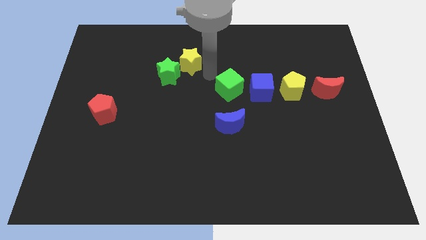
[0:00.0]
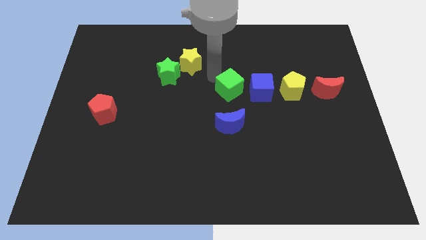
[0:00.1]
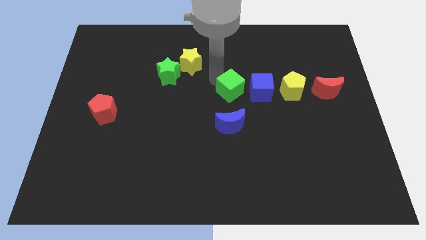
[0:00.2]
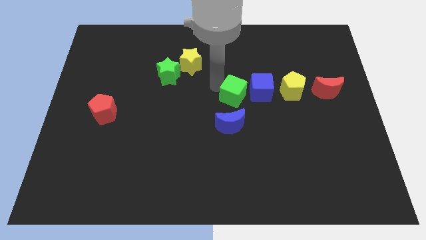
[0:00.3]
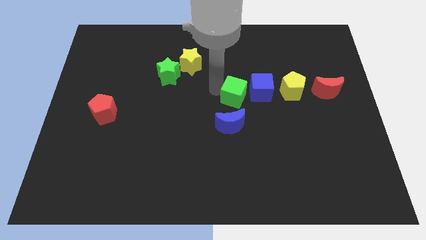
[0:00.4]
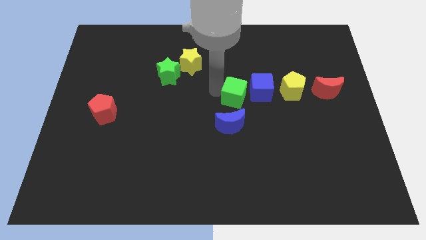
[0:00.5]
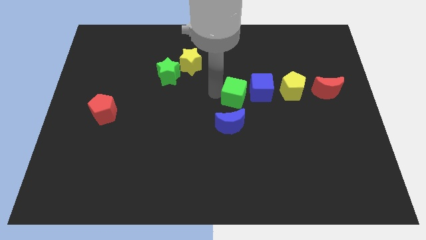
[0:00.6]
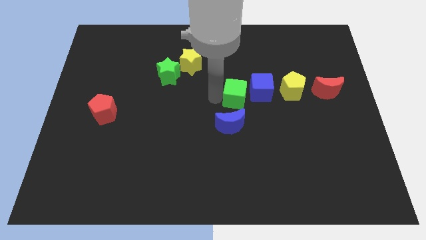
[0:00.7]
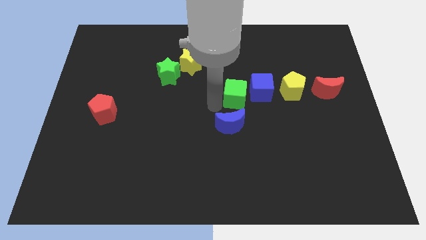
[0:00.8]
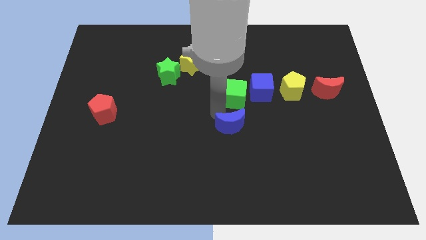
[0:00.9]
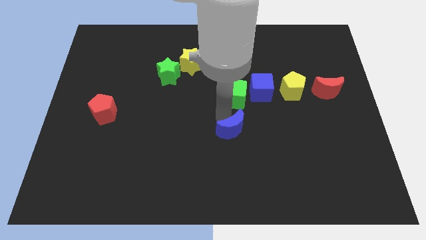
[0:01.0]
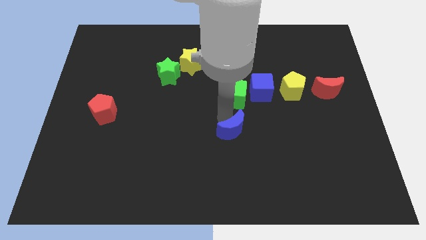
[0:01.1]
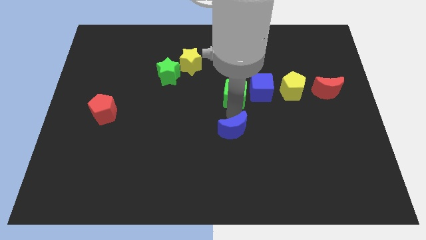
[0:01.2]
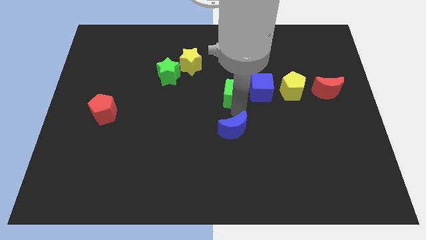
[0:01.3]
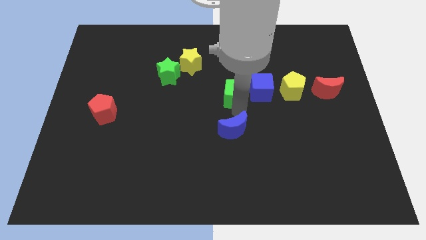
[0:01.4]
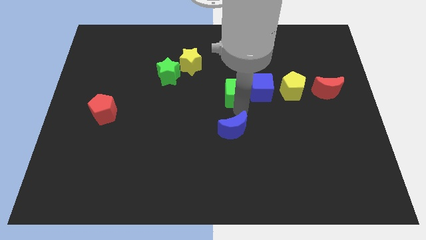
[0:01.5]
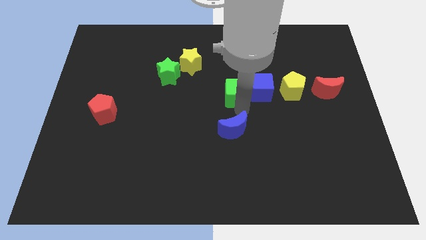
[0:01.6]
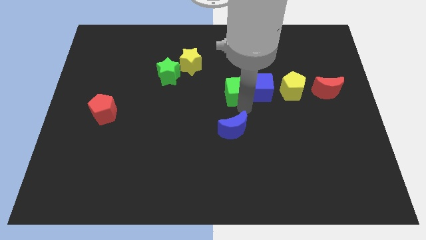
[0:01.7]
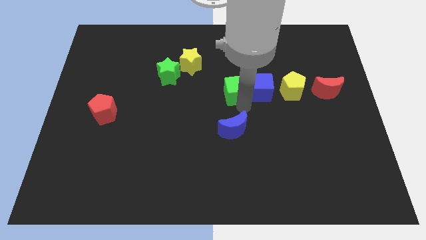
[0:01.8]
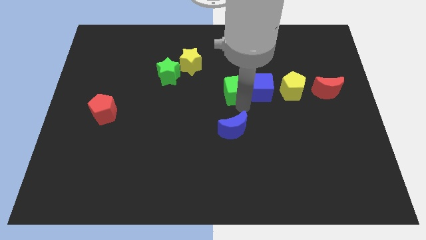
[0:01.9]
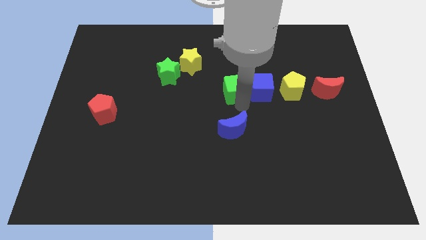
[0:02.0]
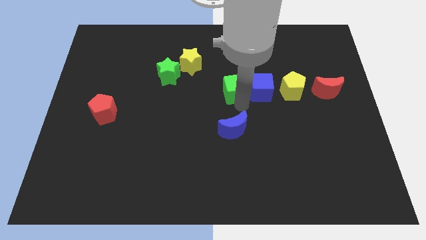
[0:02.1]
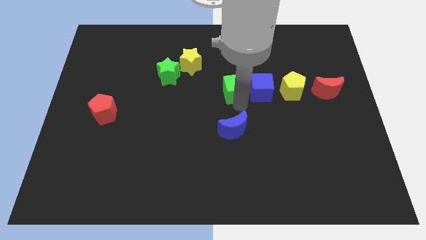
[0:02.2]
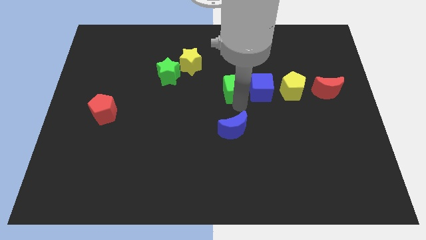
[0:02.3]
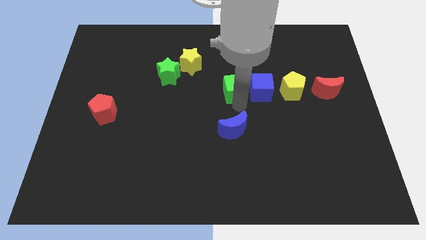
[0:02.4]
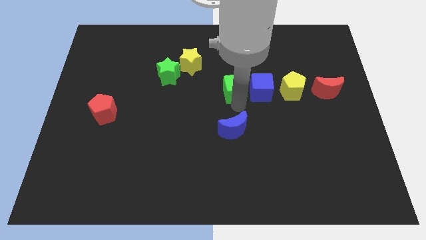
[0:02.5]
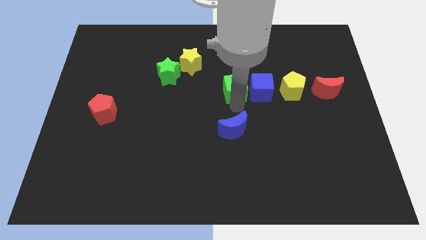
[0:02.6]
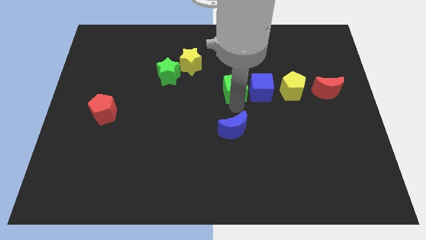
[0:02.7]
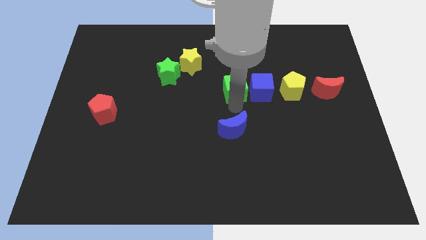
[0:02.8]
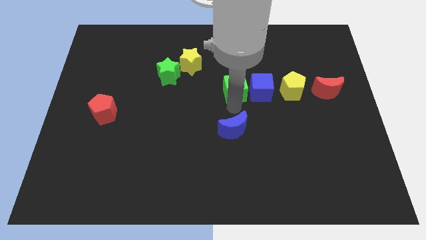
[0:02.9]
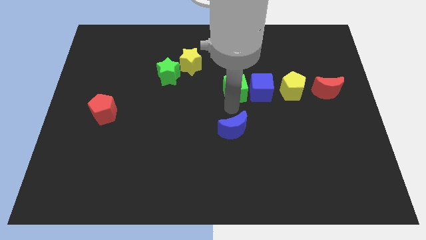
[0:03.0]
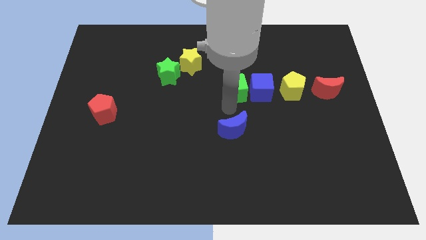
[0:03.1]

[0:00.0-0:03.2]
bring the green cube at the left side of the blue cube

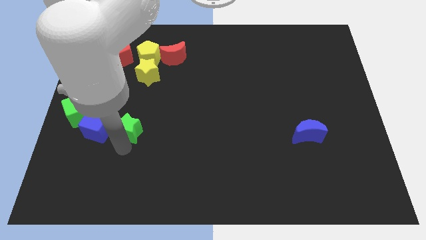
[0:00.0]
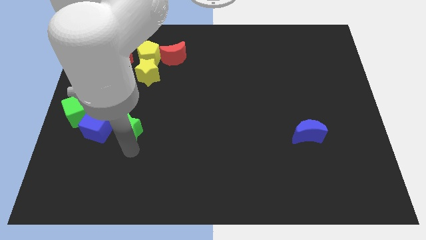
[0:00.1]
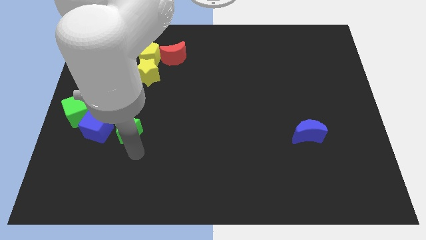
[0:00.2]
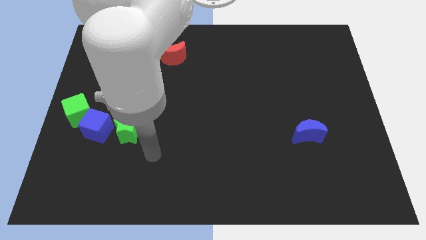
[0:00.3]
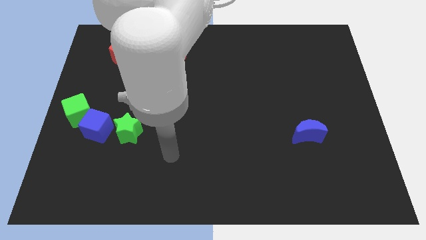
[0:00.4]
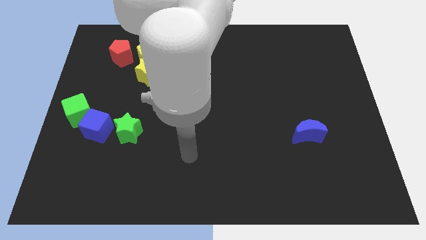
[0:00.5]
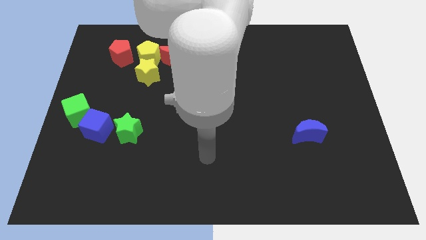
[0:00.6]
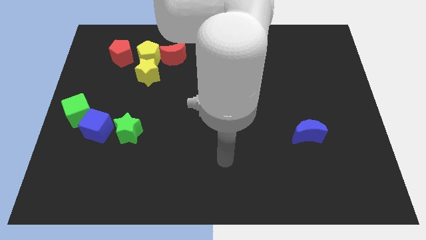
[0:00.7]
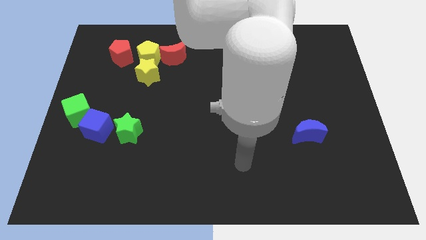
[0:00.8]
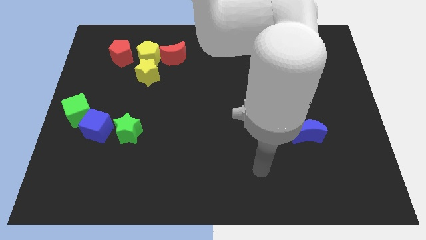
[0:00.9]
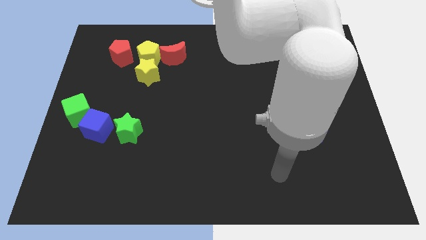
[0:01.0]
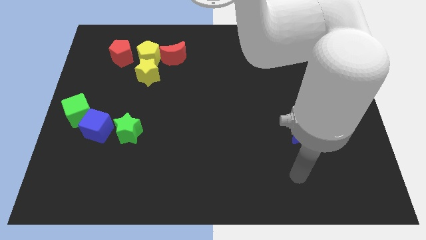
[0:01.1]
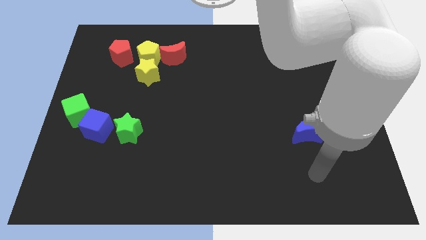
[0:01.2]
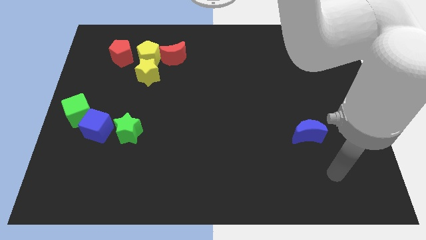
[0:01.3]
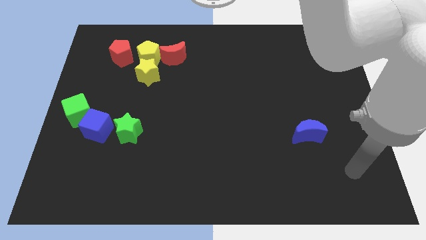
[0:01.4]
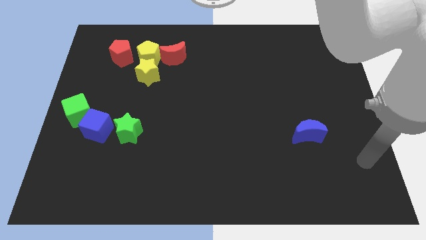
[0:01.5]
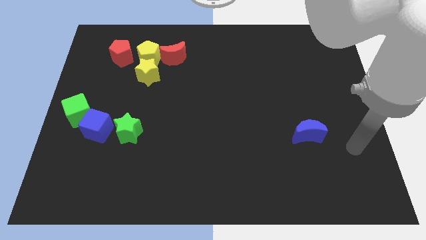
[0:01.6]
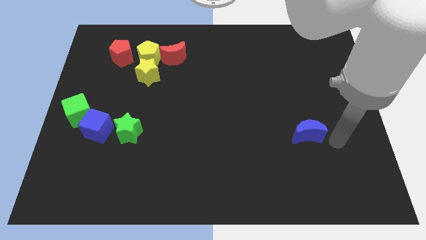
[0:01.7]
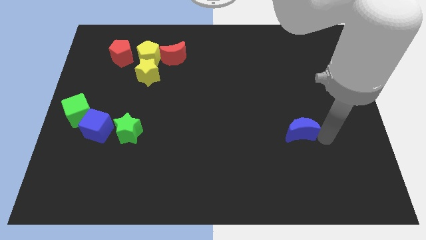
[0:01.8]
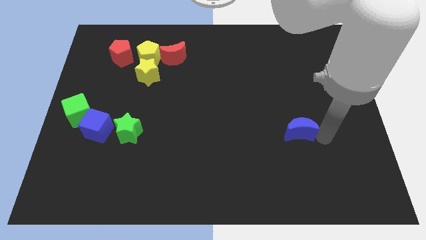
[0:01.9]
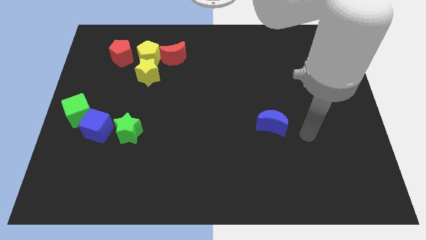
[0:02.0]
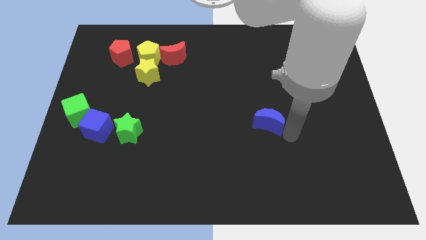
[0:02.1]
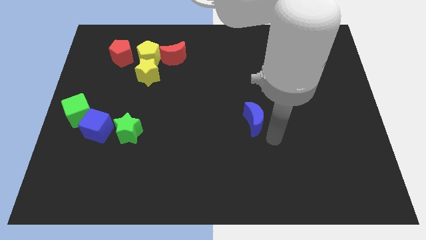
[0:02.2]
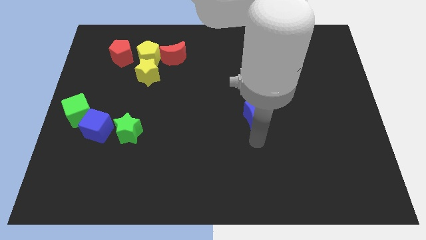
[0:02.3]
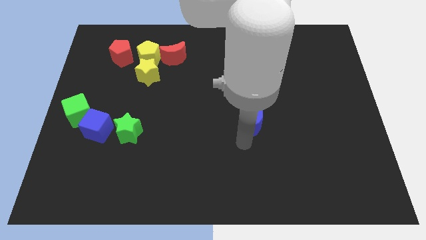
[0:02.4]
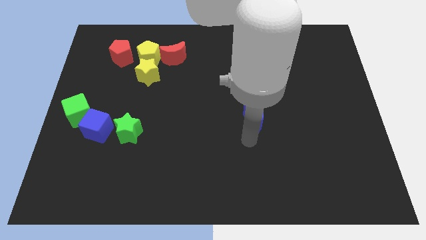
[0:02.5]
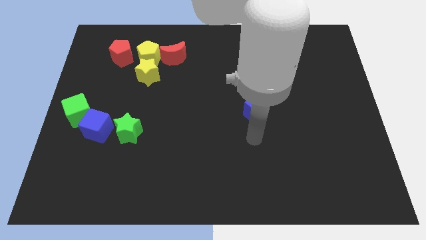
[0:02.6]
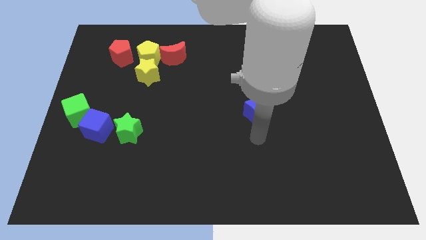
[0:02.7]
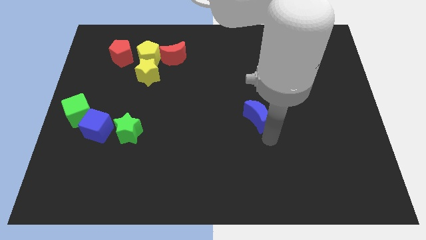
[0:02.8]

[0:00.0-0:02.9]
slide the blue moon to the left

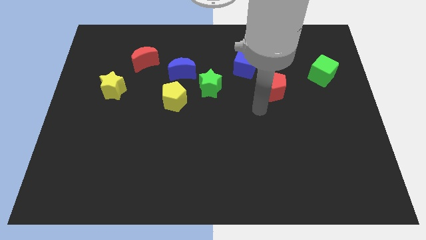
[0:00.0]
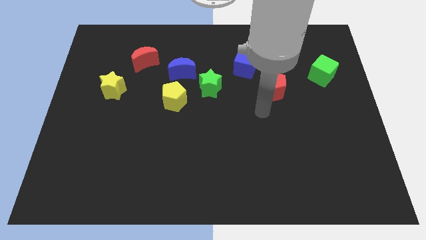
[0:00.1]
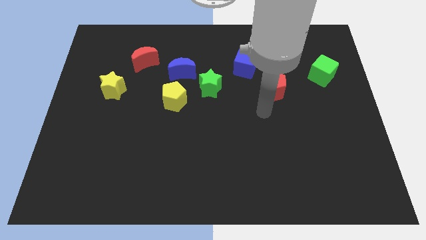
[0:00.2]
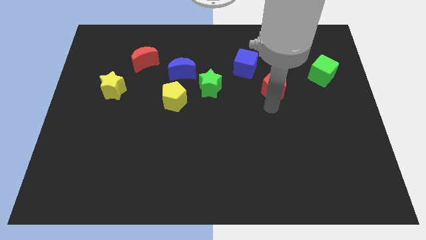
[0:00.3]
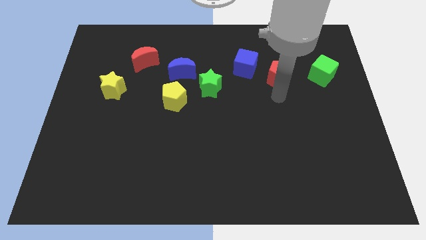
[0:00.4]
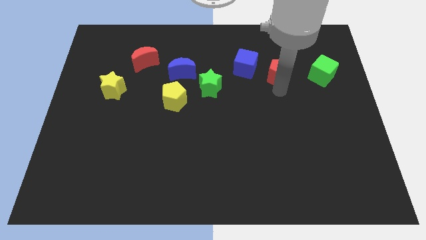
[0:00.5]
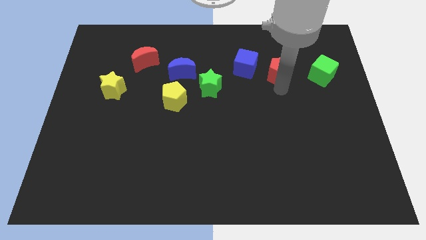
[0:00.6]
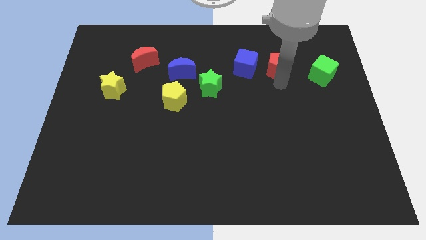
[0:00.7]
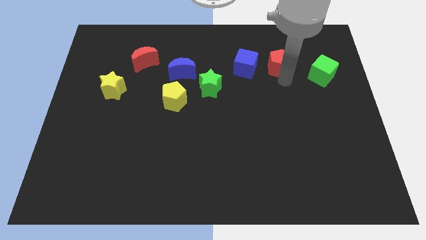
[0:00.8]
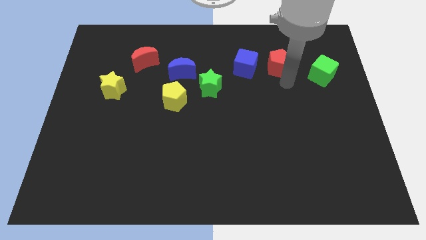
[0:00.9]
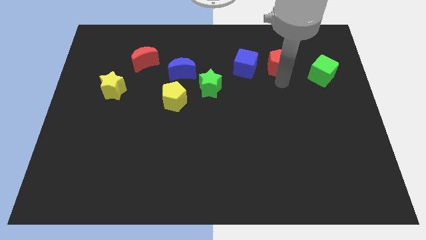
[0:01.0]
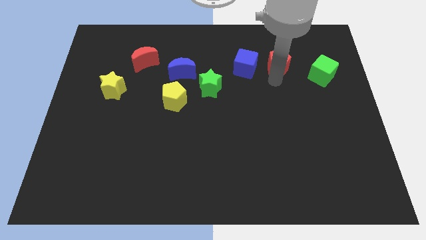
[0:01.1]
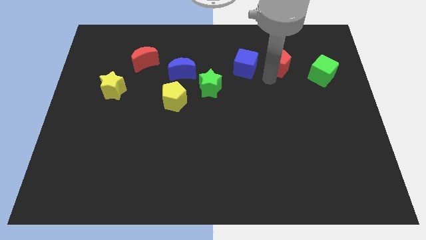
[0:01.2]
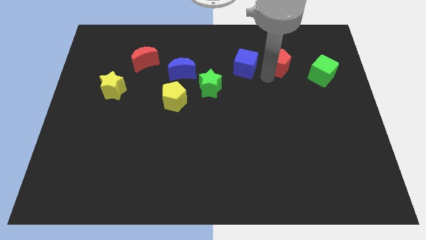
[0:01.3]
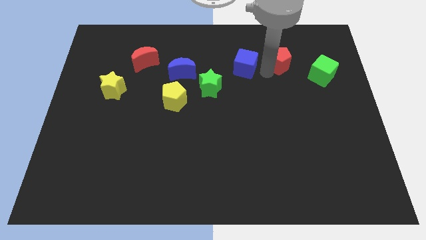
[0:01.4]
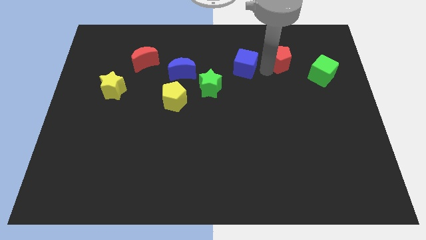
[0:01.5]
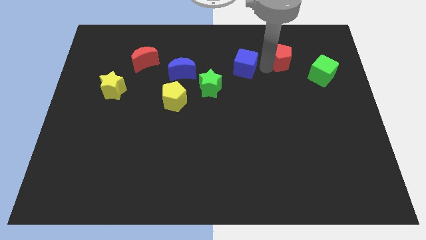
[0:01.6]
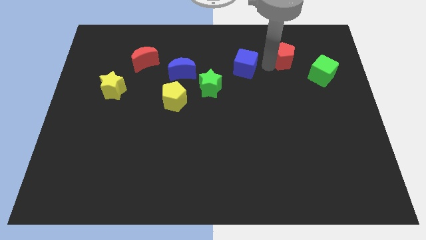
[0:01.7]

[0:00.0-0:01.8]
place red pentagon right to blue cube

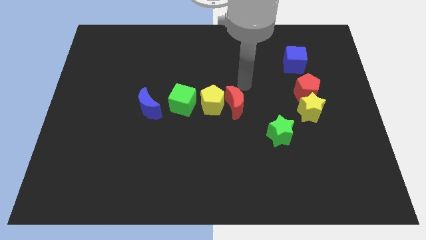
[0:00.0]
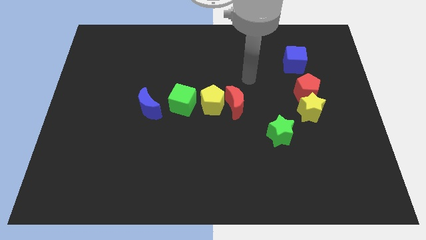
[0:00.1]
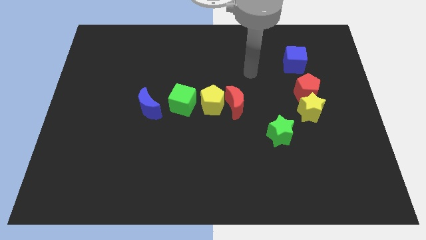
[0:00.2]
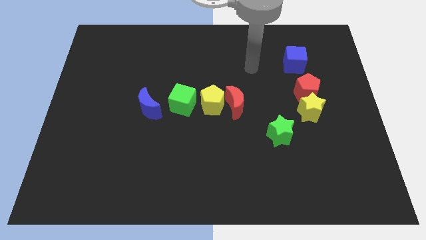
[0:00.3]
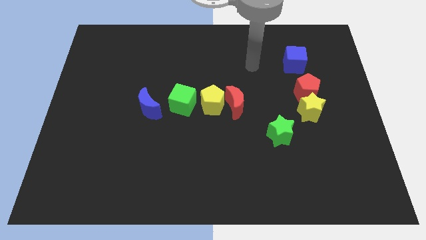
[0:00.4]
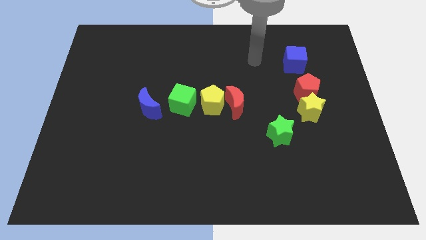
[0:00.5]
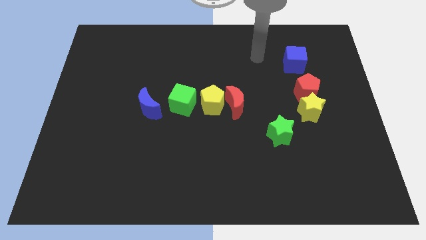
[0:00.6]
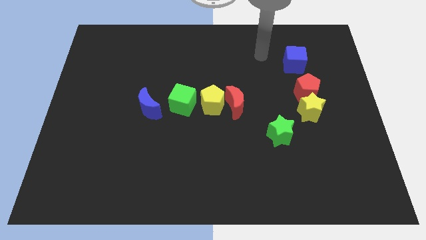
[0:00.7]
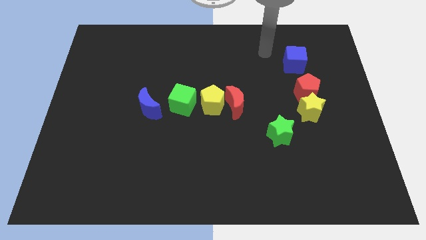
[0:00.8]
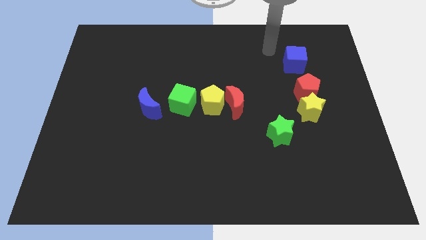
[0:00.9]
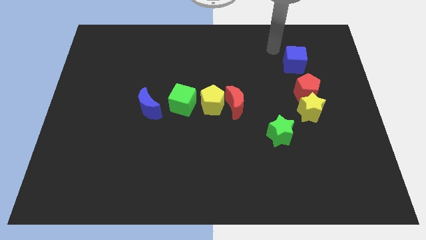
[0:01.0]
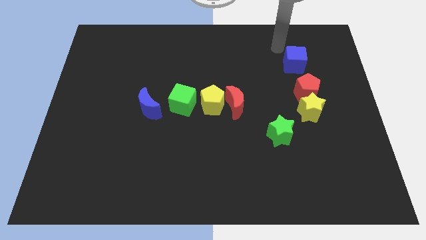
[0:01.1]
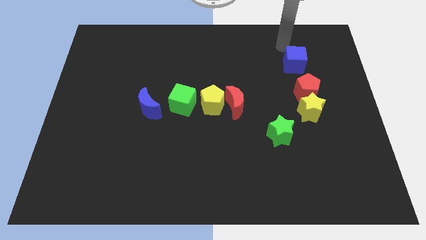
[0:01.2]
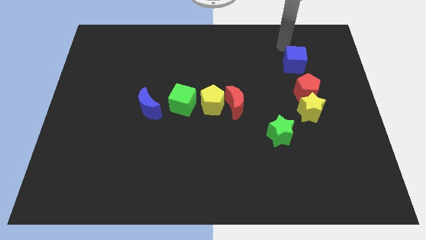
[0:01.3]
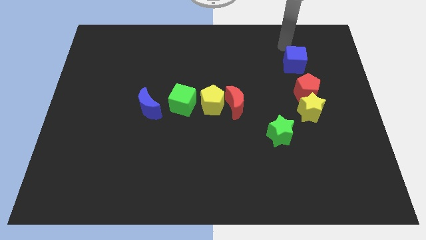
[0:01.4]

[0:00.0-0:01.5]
move the arm away from the red moon
